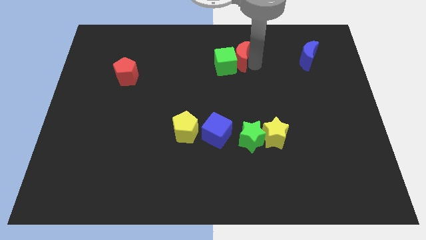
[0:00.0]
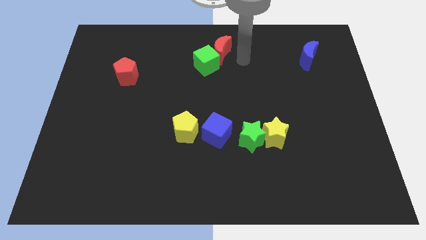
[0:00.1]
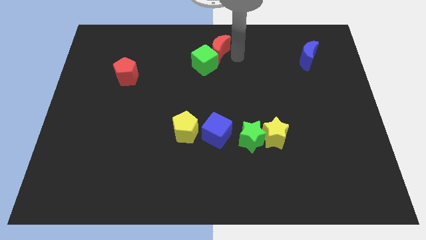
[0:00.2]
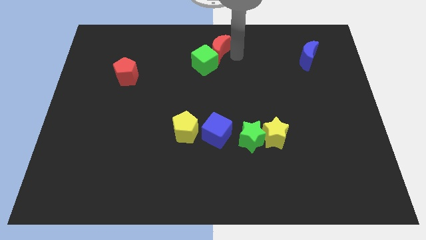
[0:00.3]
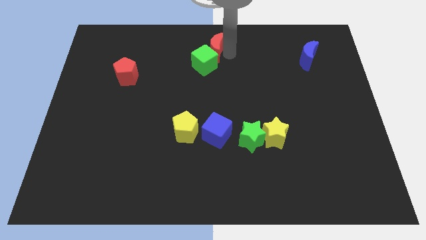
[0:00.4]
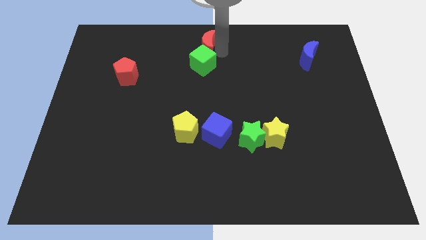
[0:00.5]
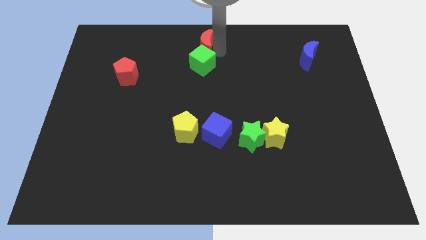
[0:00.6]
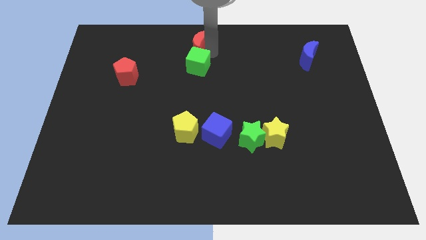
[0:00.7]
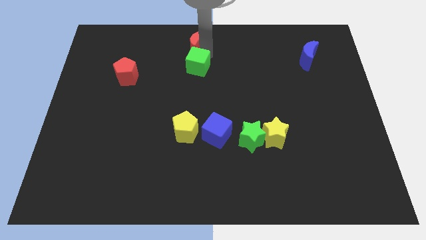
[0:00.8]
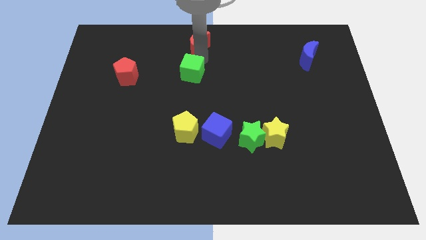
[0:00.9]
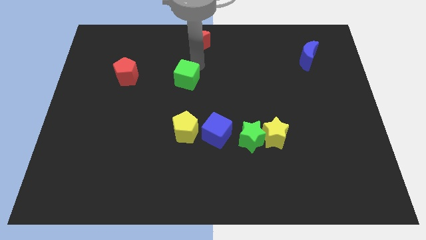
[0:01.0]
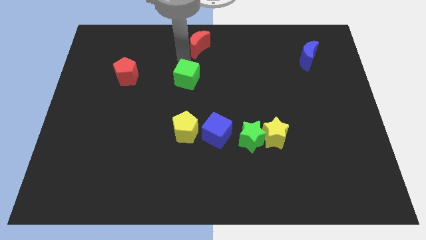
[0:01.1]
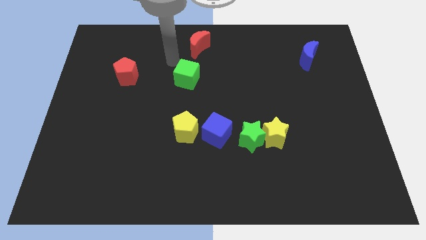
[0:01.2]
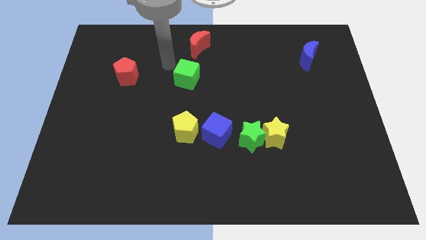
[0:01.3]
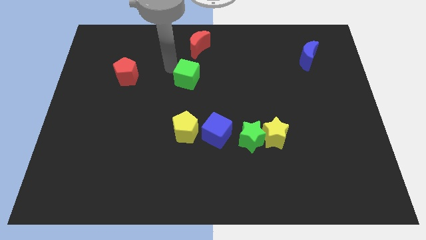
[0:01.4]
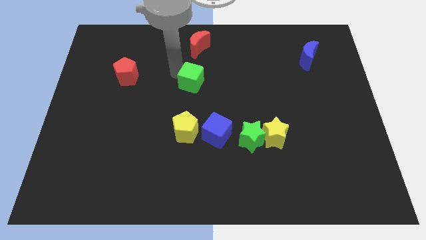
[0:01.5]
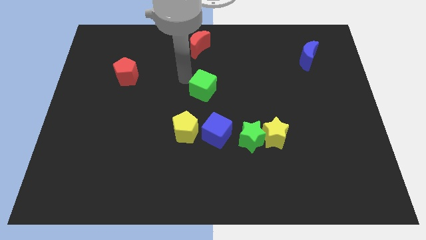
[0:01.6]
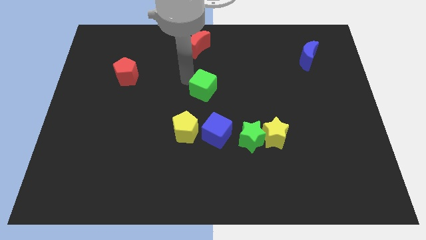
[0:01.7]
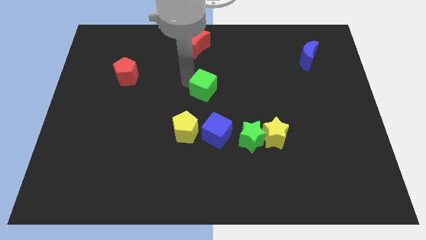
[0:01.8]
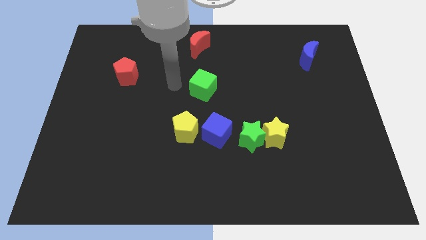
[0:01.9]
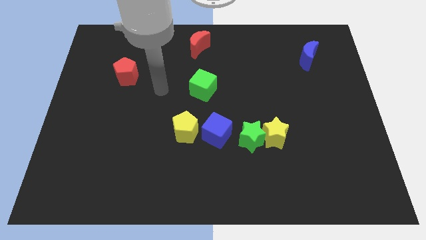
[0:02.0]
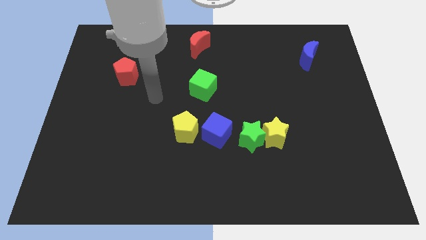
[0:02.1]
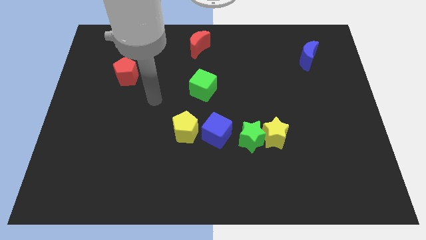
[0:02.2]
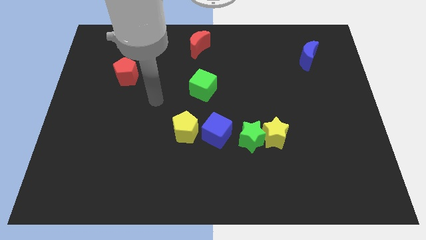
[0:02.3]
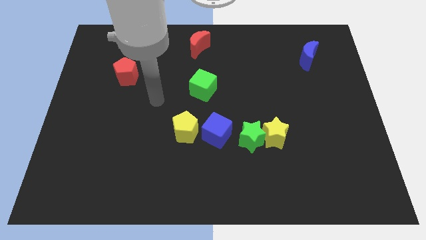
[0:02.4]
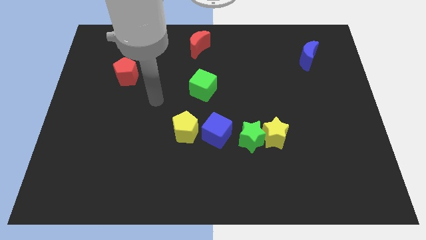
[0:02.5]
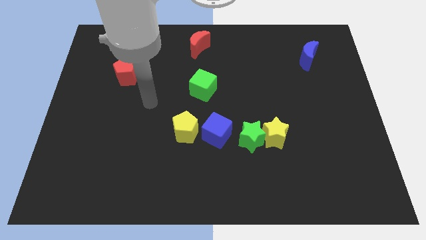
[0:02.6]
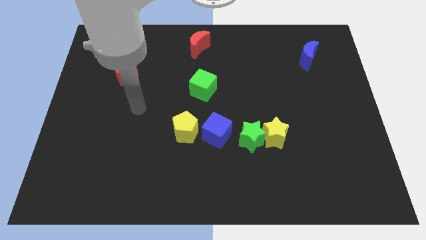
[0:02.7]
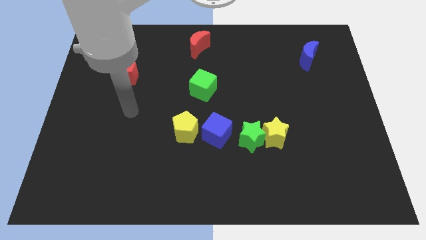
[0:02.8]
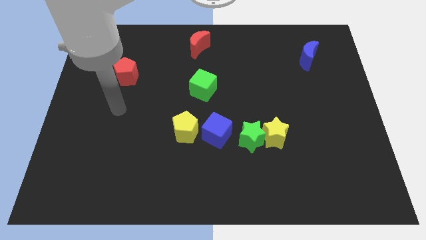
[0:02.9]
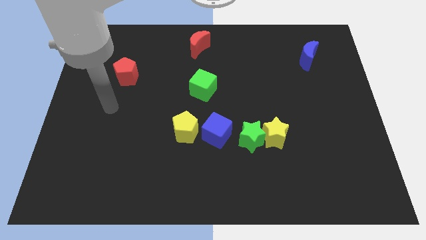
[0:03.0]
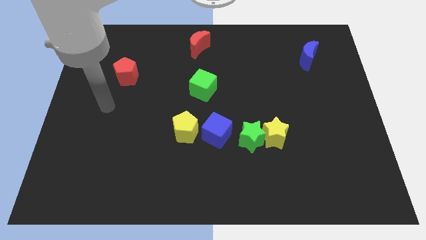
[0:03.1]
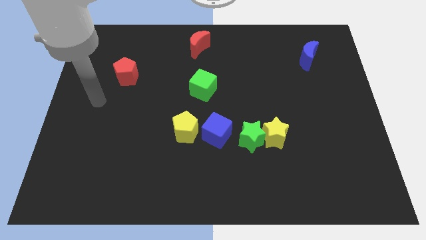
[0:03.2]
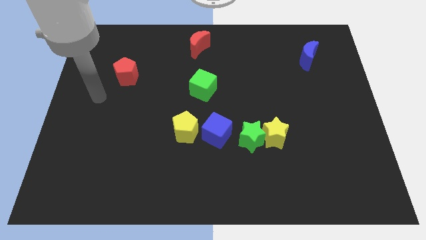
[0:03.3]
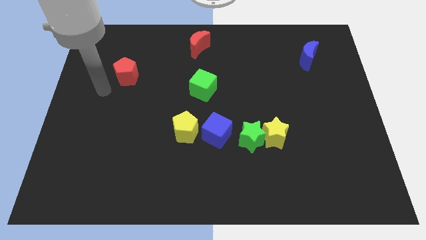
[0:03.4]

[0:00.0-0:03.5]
separate green cube from red crescent

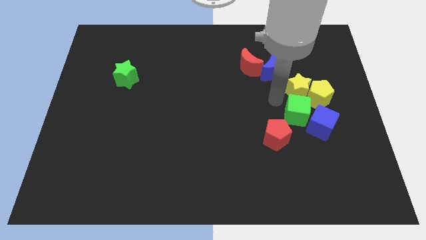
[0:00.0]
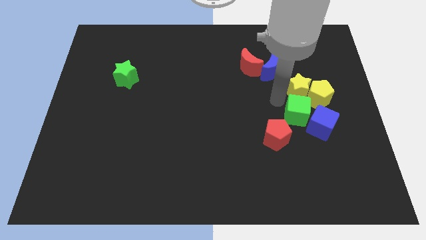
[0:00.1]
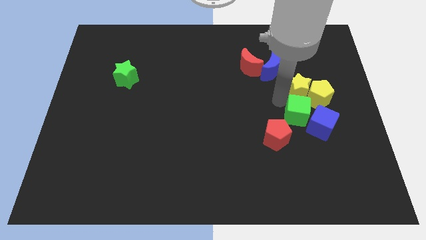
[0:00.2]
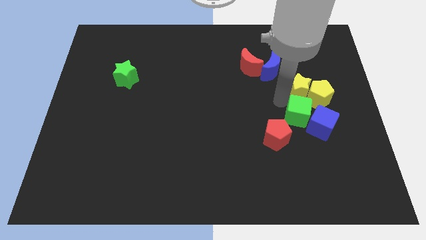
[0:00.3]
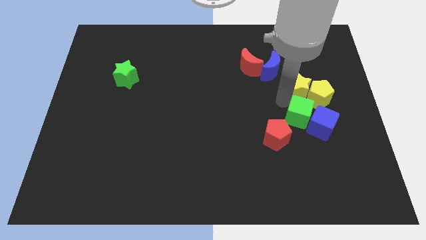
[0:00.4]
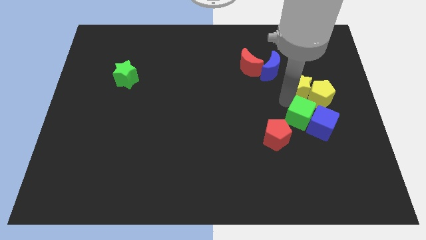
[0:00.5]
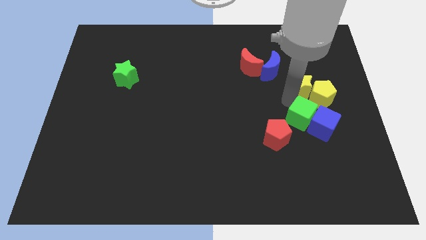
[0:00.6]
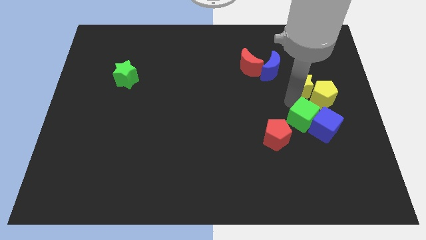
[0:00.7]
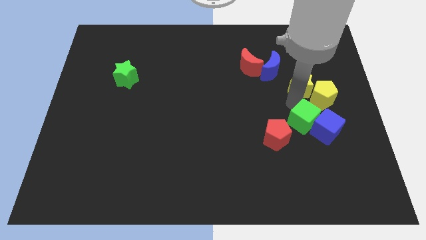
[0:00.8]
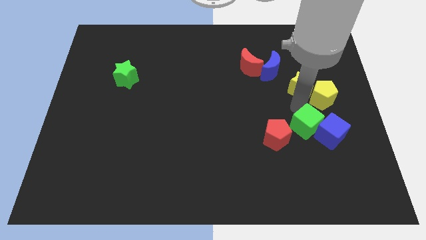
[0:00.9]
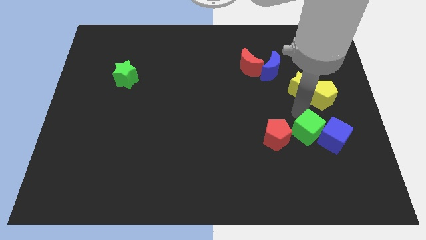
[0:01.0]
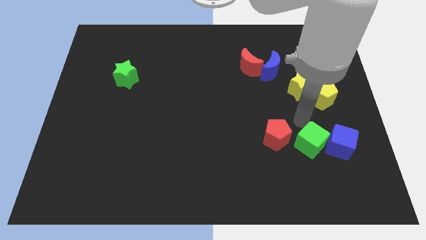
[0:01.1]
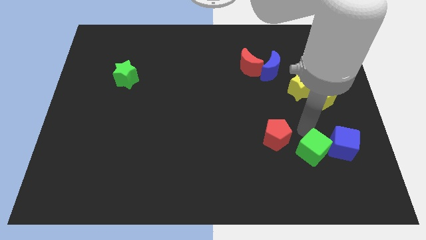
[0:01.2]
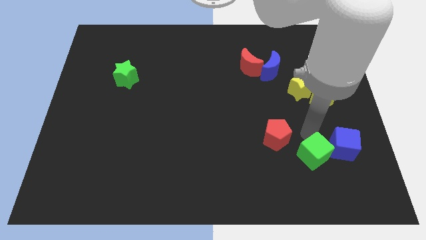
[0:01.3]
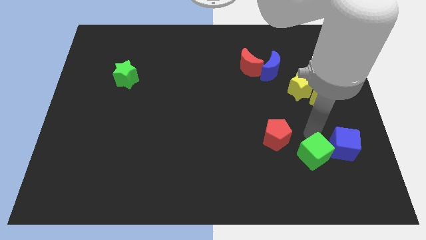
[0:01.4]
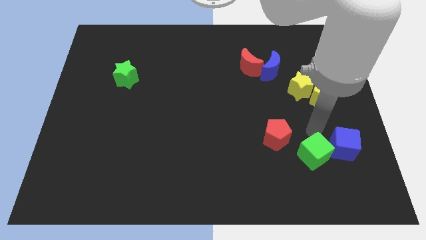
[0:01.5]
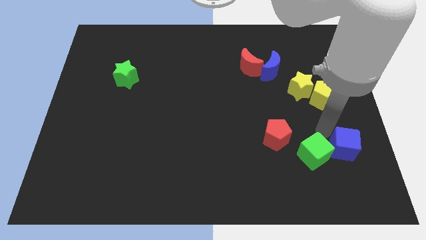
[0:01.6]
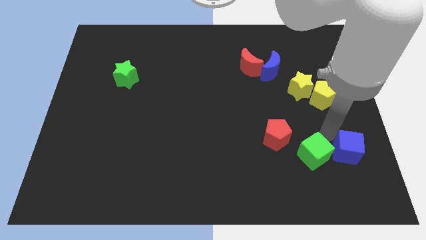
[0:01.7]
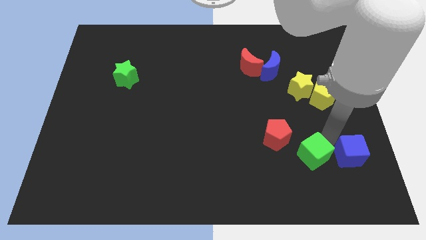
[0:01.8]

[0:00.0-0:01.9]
move the green cube and blue cube towards the right bottom of the board

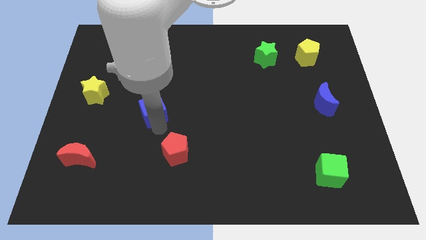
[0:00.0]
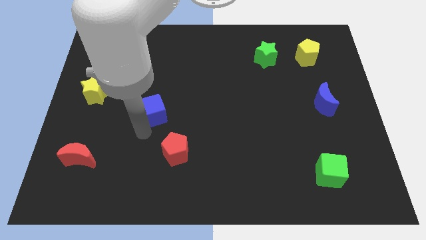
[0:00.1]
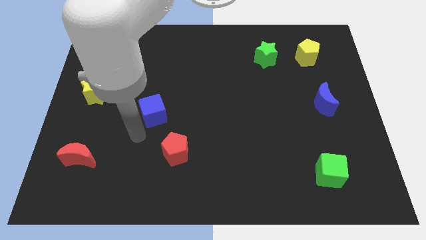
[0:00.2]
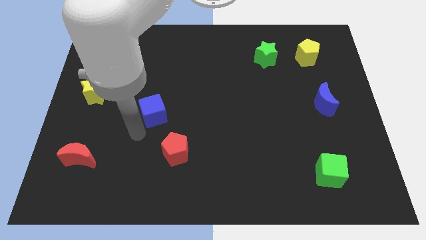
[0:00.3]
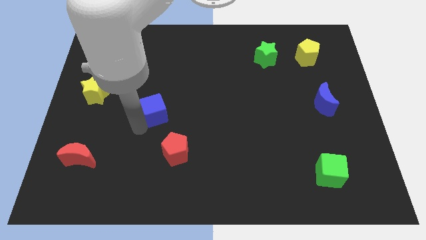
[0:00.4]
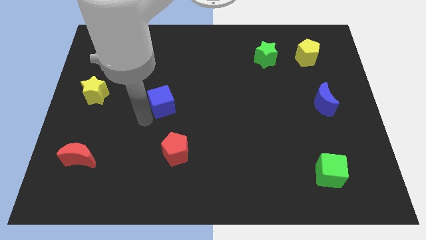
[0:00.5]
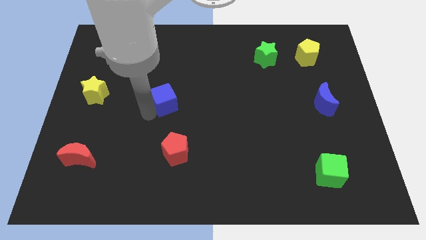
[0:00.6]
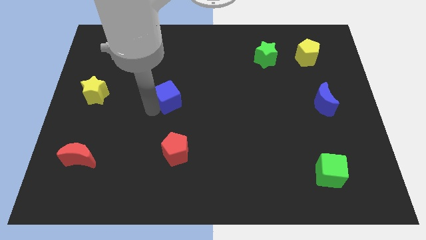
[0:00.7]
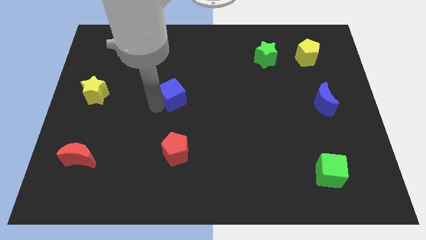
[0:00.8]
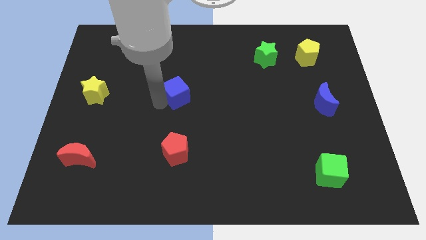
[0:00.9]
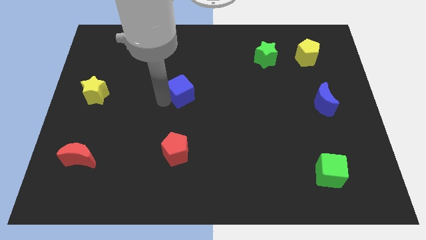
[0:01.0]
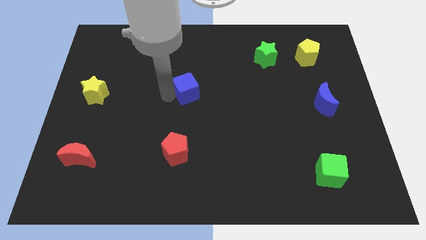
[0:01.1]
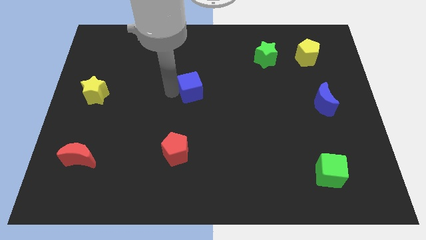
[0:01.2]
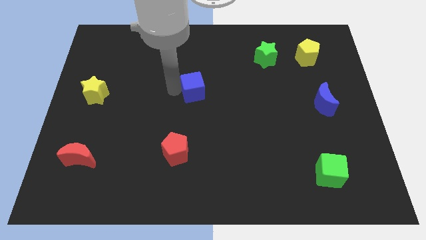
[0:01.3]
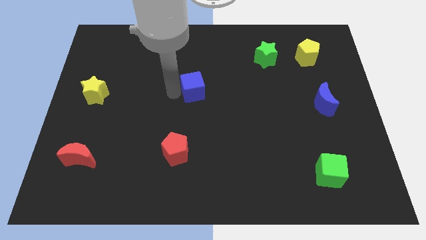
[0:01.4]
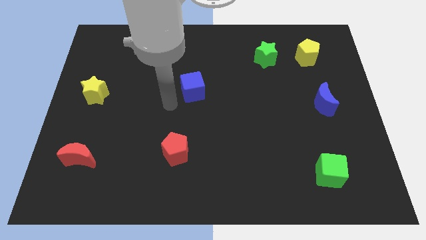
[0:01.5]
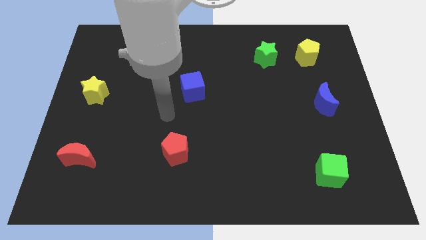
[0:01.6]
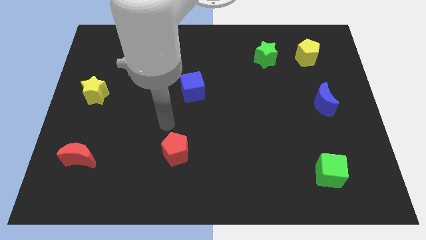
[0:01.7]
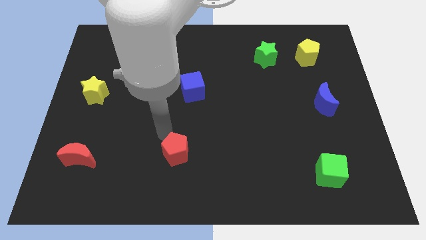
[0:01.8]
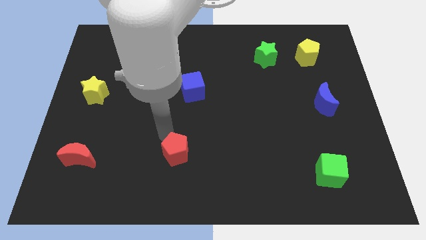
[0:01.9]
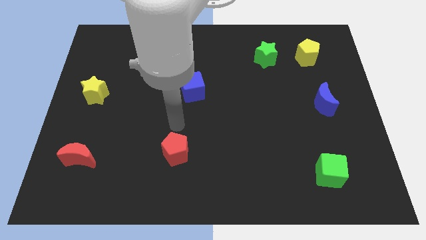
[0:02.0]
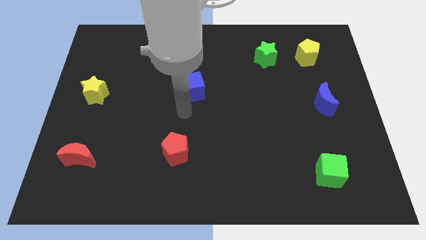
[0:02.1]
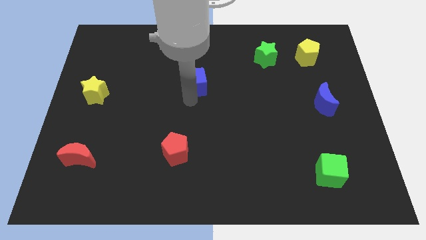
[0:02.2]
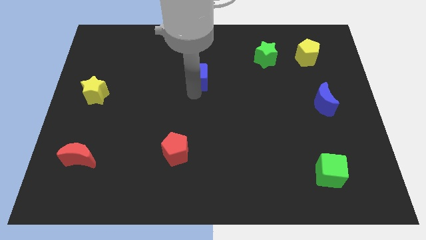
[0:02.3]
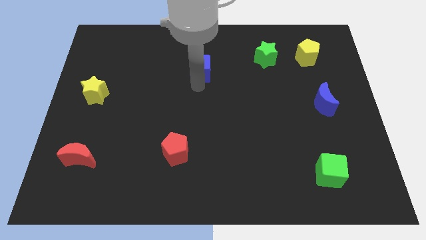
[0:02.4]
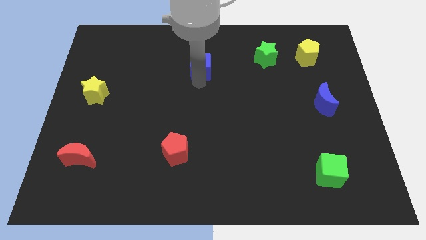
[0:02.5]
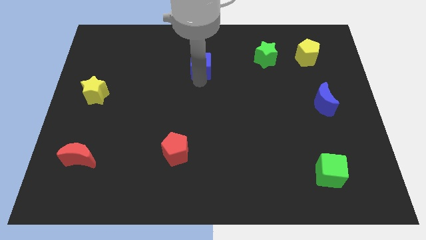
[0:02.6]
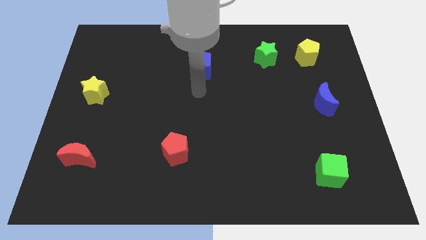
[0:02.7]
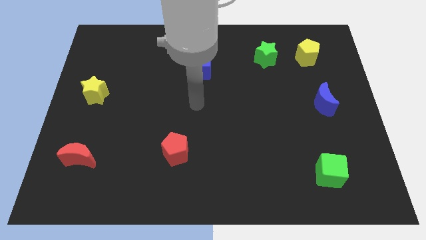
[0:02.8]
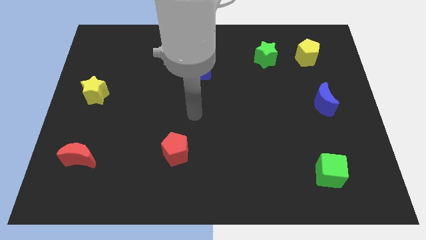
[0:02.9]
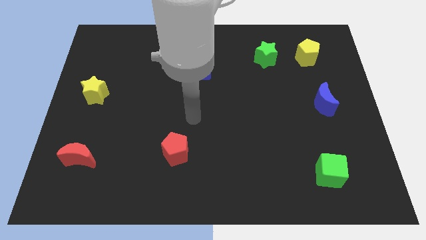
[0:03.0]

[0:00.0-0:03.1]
move the blue cube towards the top center

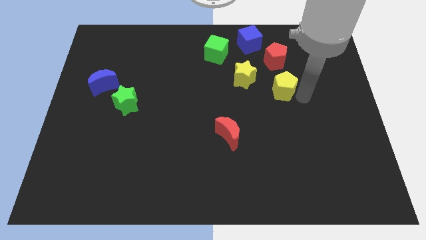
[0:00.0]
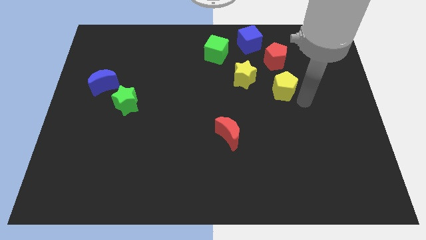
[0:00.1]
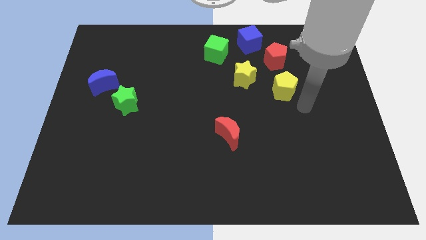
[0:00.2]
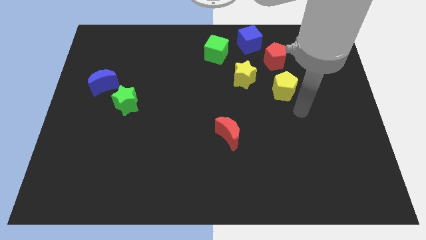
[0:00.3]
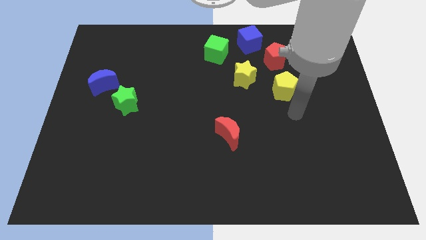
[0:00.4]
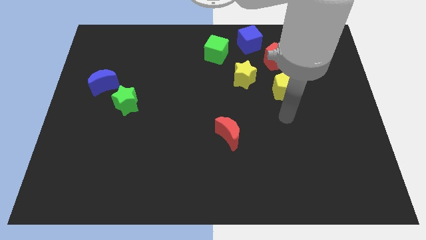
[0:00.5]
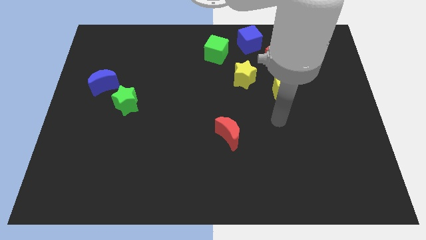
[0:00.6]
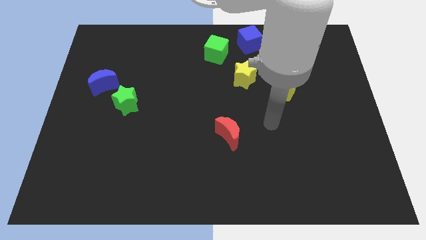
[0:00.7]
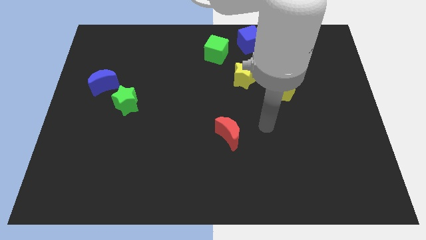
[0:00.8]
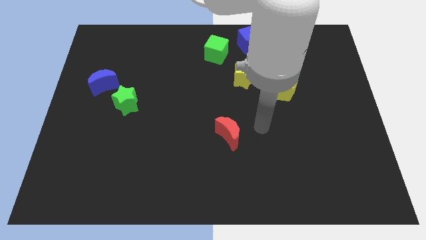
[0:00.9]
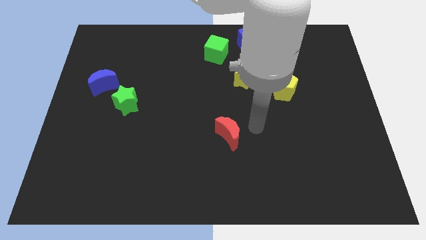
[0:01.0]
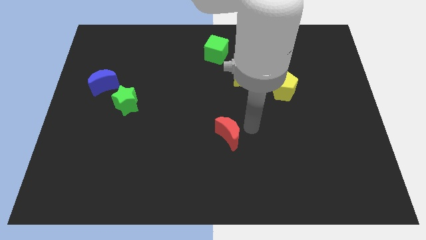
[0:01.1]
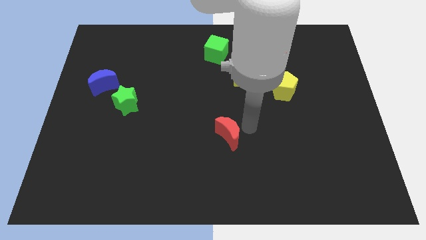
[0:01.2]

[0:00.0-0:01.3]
move your arm away from the yellow pentagon
